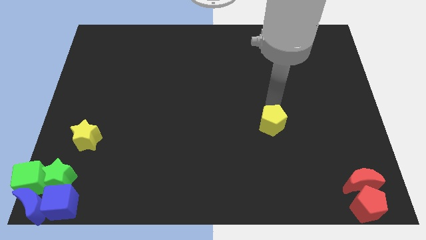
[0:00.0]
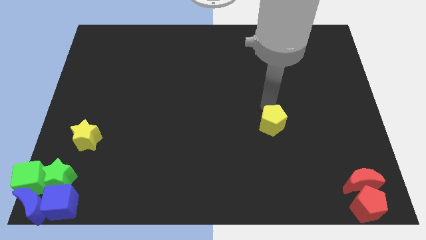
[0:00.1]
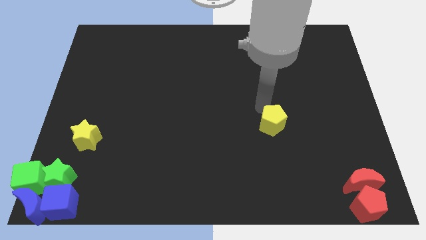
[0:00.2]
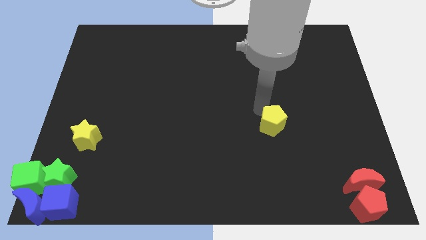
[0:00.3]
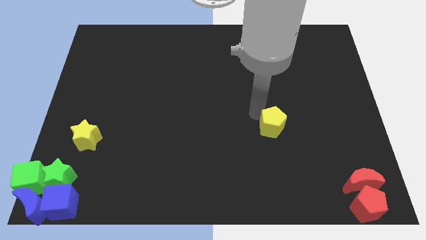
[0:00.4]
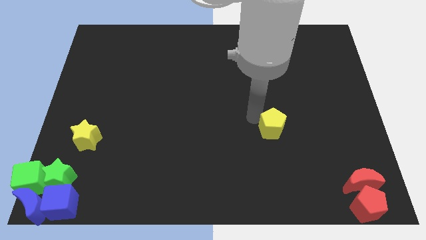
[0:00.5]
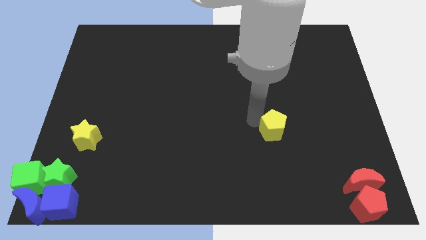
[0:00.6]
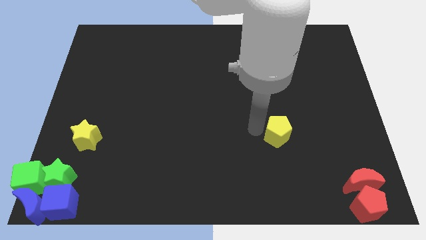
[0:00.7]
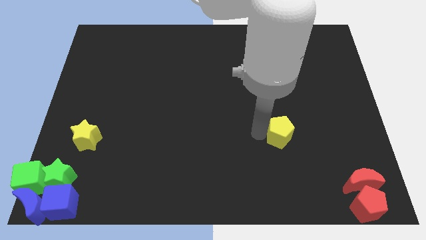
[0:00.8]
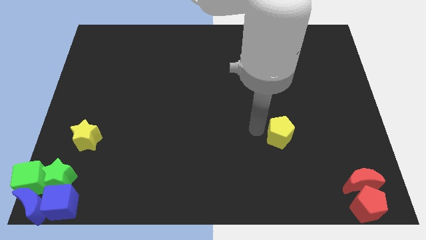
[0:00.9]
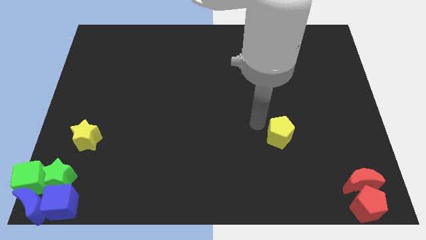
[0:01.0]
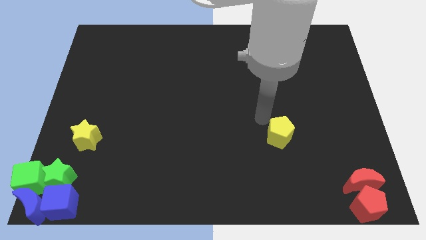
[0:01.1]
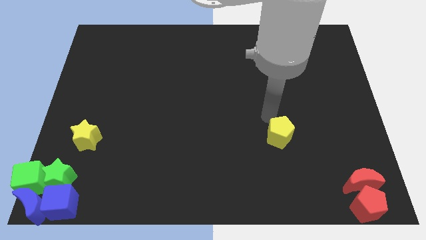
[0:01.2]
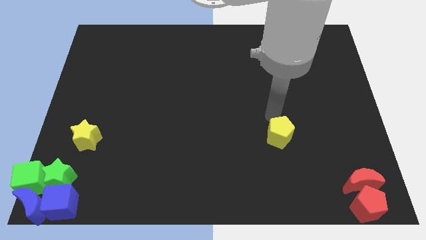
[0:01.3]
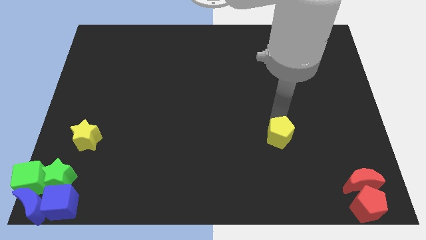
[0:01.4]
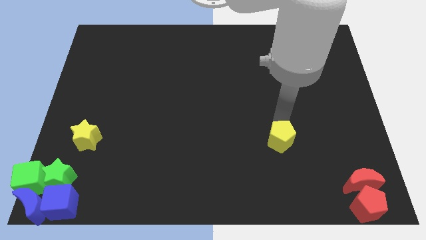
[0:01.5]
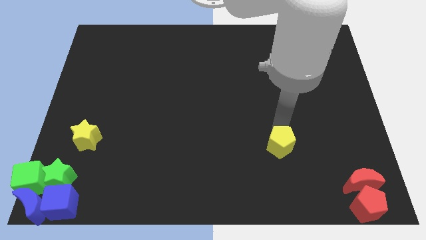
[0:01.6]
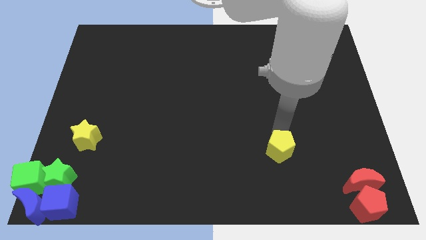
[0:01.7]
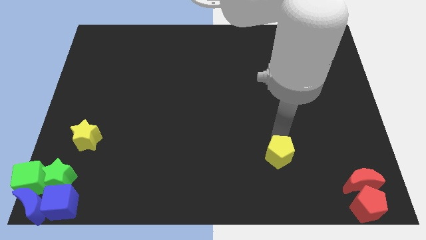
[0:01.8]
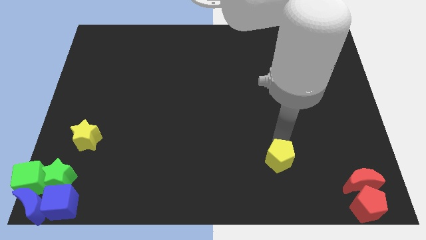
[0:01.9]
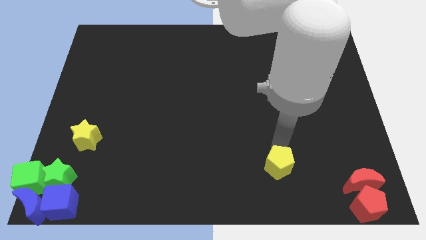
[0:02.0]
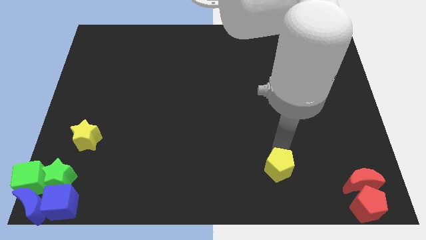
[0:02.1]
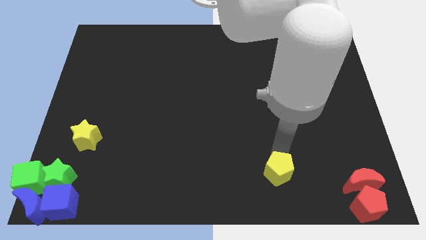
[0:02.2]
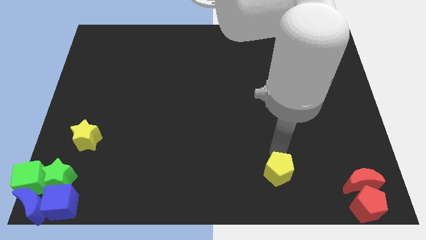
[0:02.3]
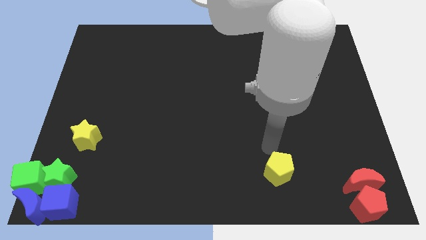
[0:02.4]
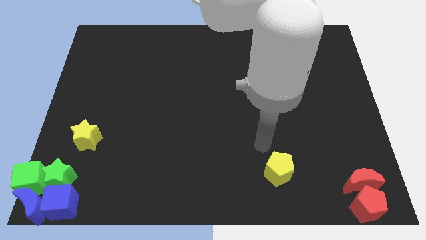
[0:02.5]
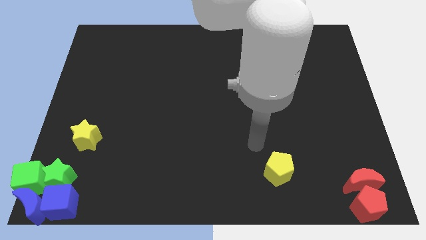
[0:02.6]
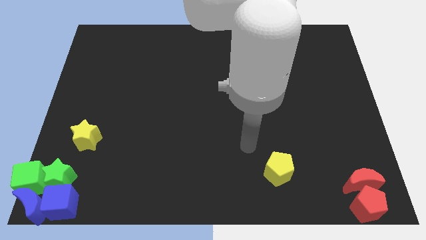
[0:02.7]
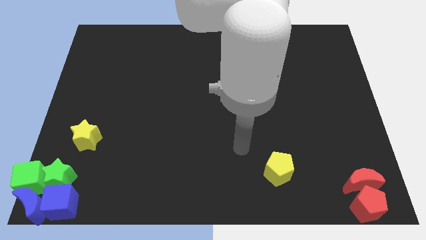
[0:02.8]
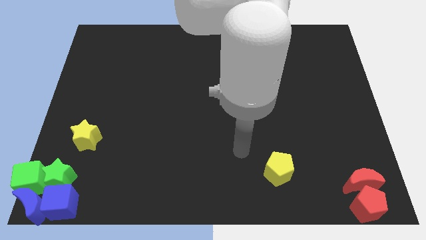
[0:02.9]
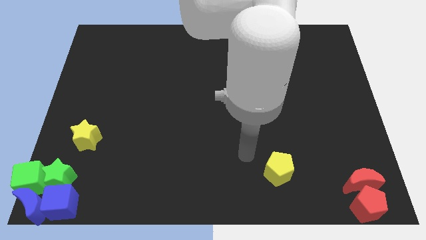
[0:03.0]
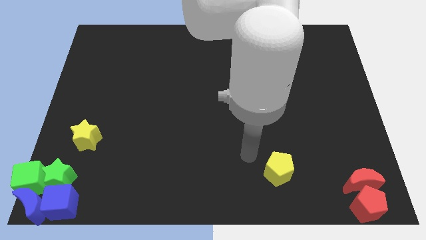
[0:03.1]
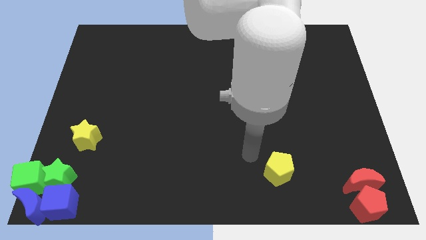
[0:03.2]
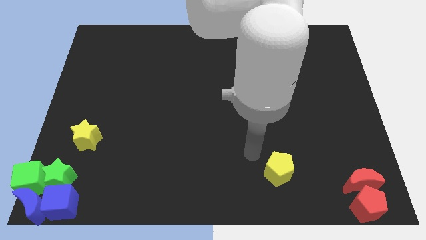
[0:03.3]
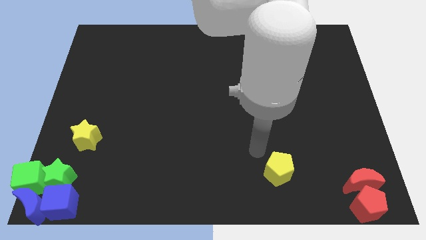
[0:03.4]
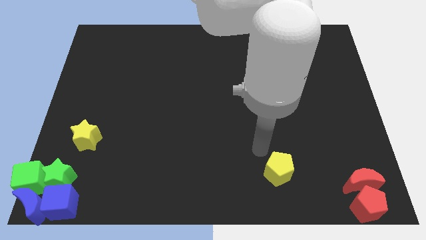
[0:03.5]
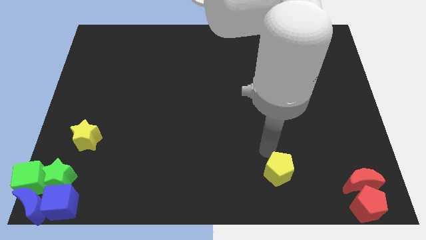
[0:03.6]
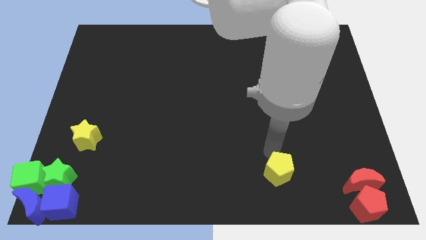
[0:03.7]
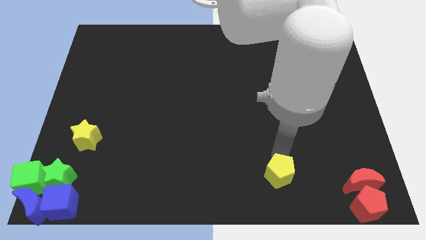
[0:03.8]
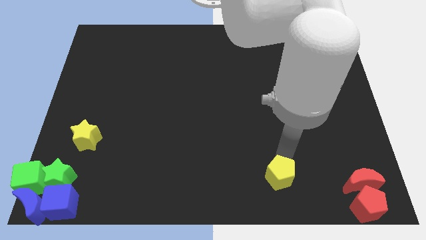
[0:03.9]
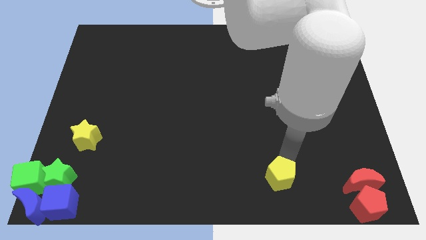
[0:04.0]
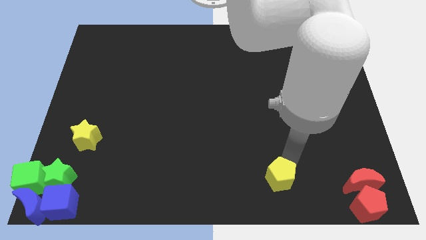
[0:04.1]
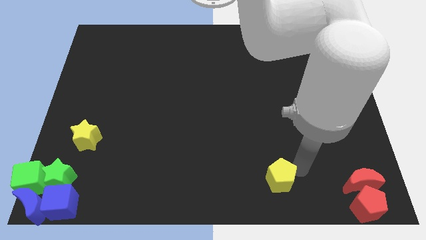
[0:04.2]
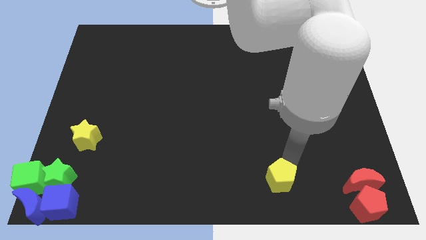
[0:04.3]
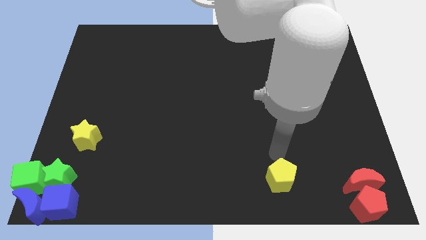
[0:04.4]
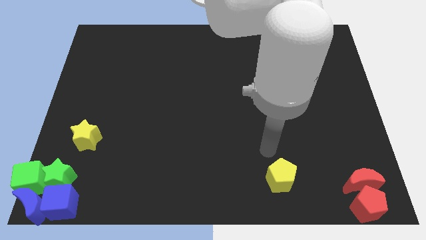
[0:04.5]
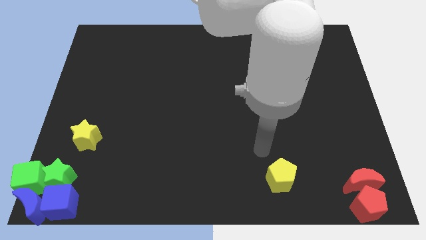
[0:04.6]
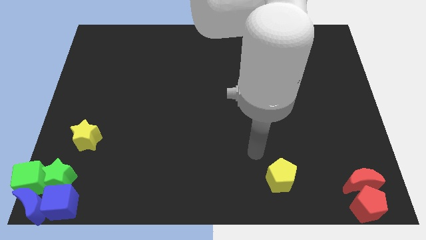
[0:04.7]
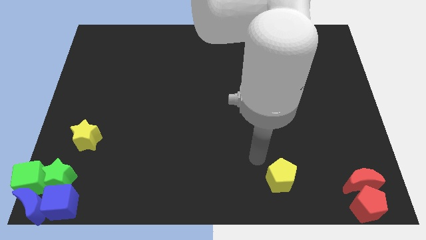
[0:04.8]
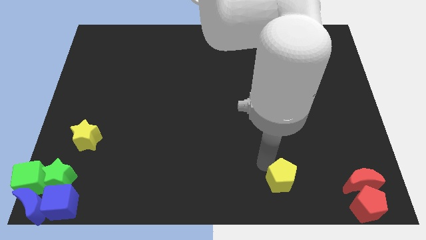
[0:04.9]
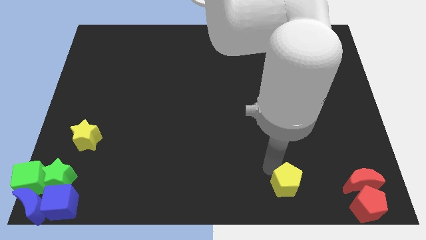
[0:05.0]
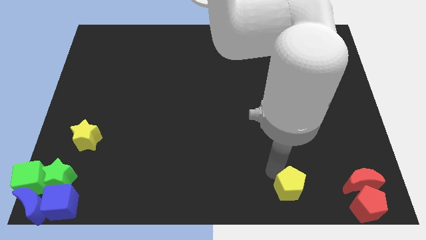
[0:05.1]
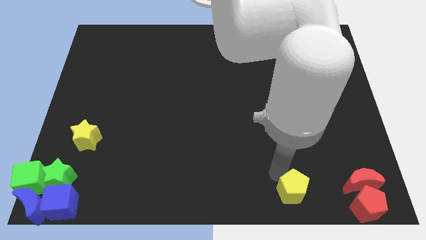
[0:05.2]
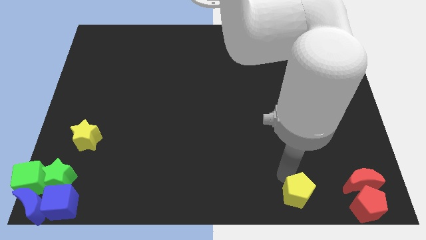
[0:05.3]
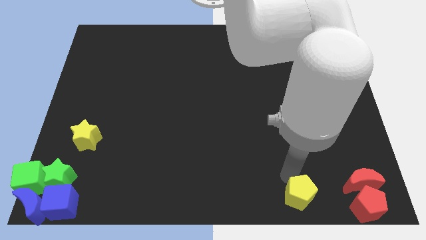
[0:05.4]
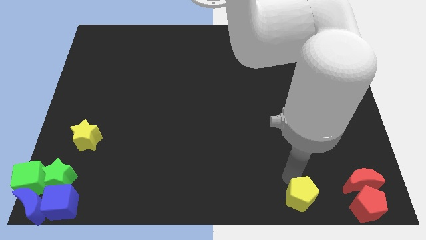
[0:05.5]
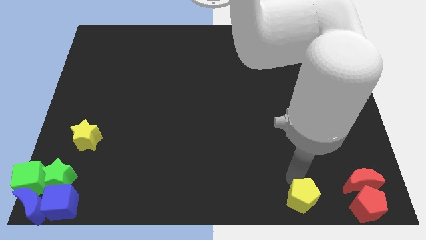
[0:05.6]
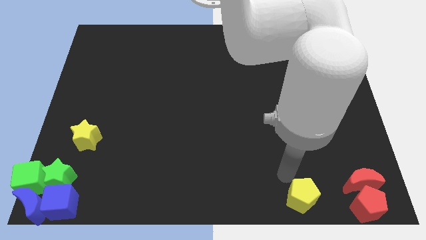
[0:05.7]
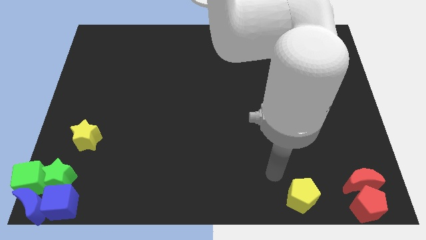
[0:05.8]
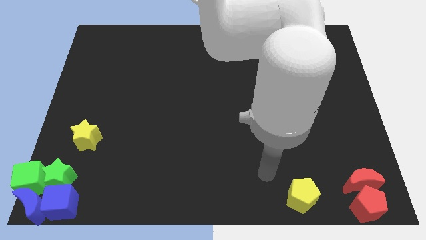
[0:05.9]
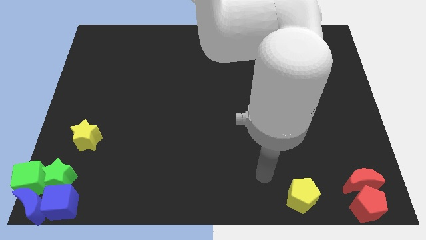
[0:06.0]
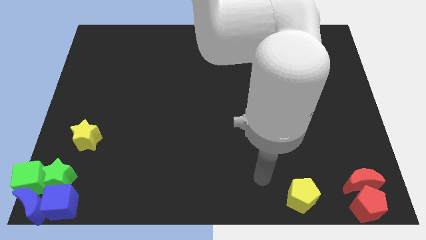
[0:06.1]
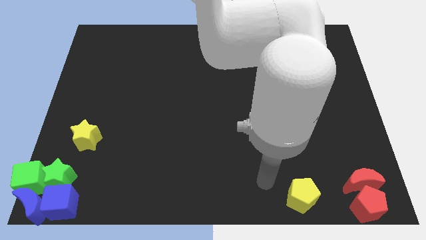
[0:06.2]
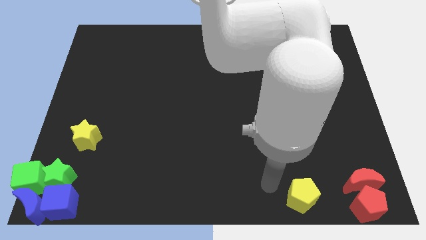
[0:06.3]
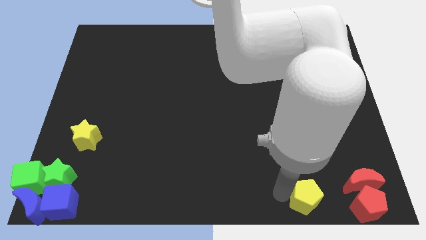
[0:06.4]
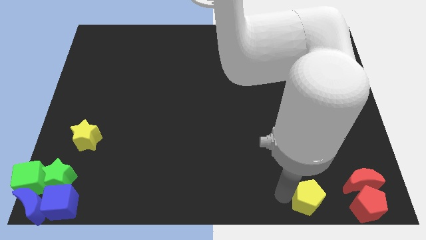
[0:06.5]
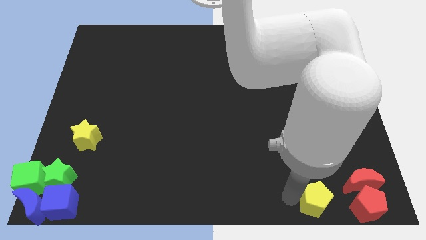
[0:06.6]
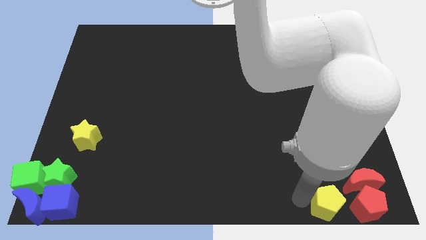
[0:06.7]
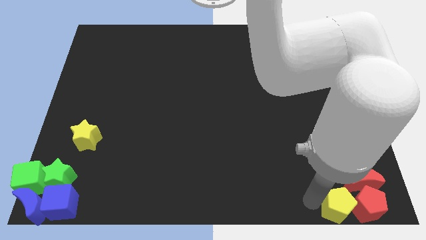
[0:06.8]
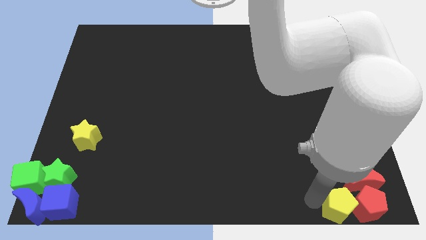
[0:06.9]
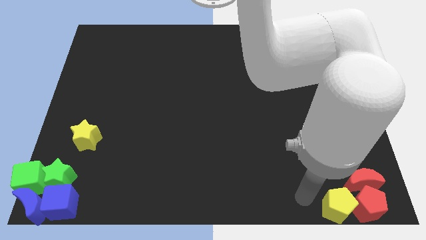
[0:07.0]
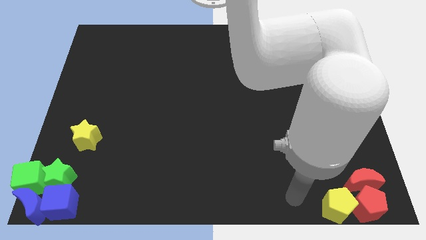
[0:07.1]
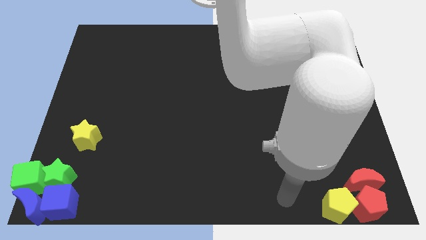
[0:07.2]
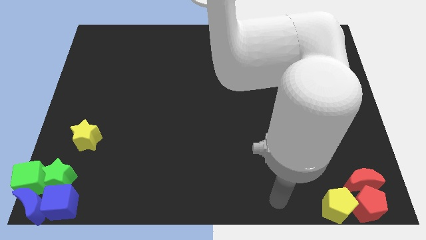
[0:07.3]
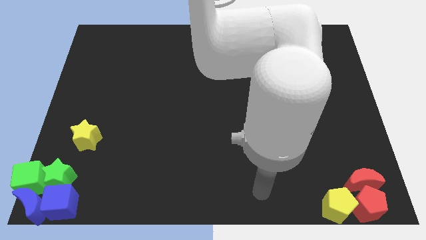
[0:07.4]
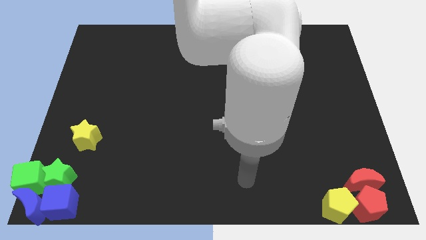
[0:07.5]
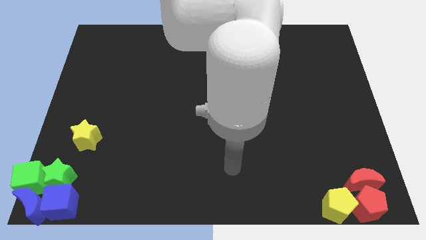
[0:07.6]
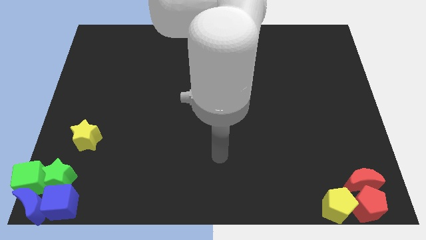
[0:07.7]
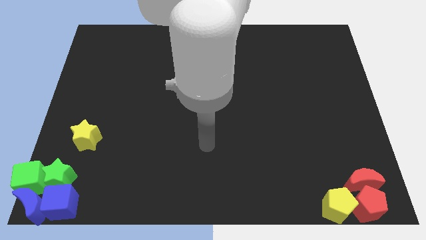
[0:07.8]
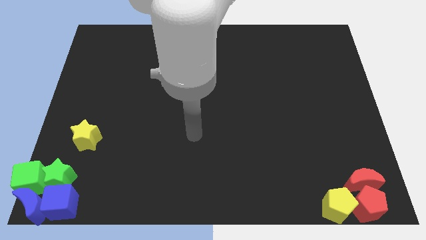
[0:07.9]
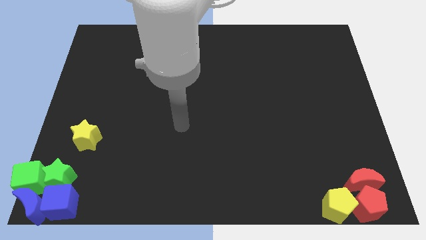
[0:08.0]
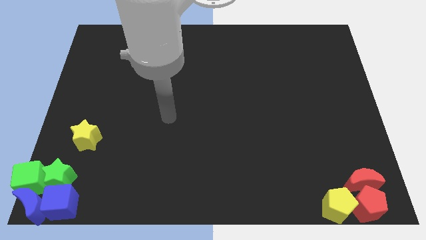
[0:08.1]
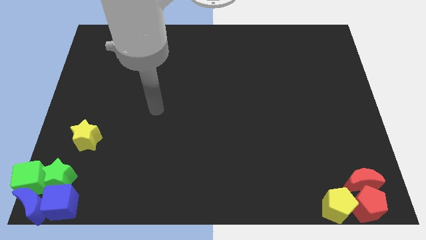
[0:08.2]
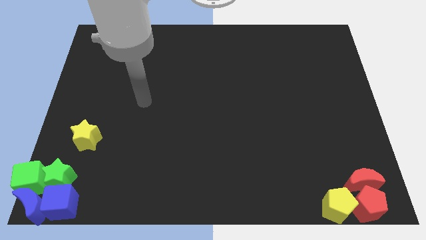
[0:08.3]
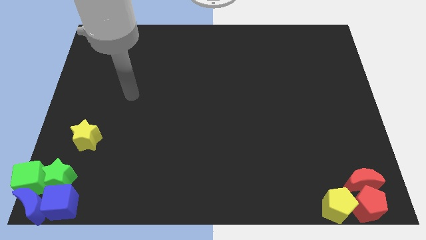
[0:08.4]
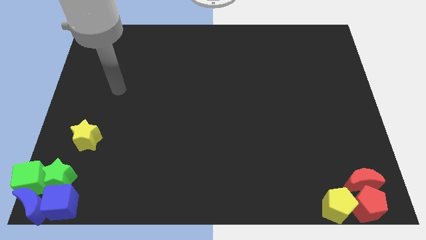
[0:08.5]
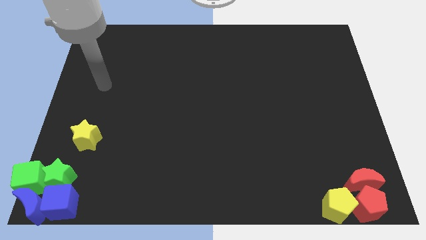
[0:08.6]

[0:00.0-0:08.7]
place the yellow pentagon to the left of the red pentagon

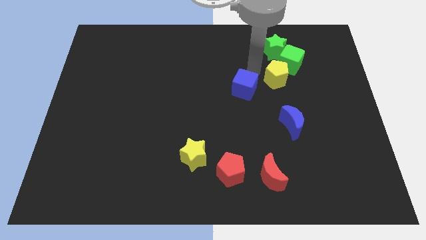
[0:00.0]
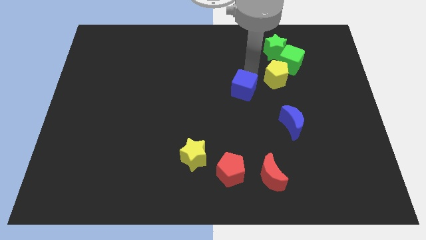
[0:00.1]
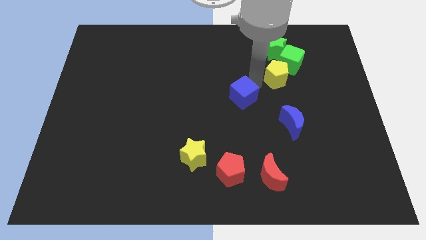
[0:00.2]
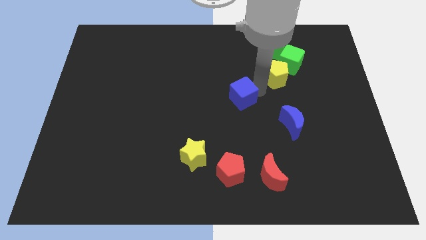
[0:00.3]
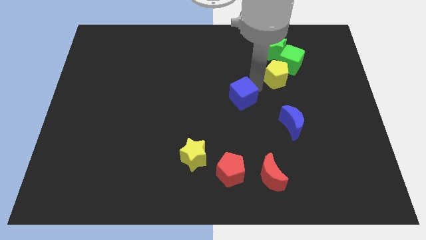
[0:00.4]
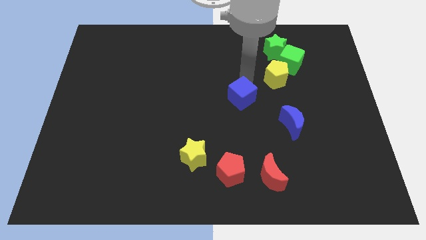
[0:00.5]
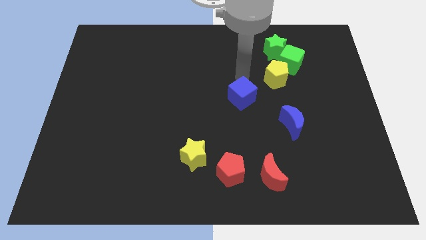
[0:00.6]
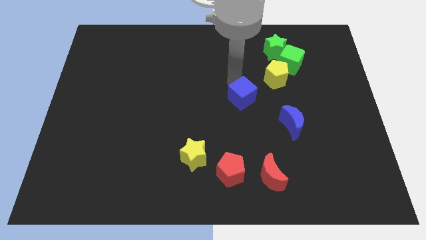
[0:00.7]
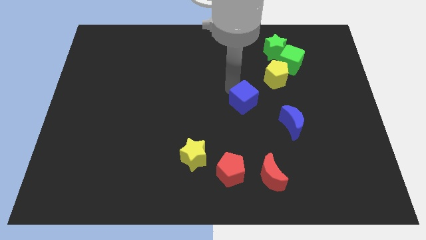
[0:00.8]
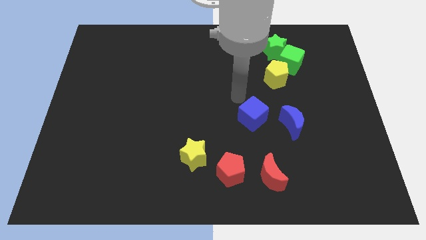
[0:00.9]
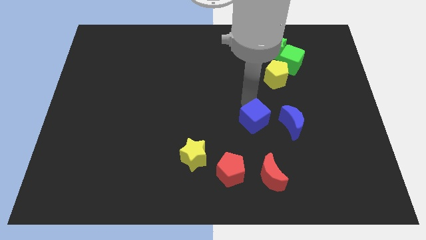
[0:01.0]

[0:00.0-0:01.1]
slide blue cube left of blue moon
